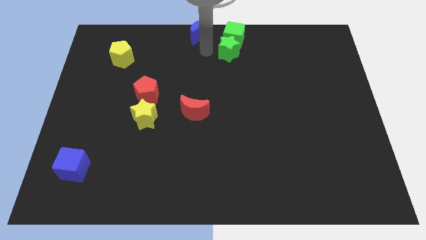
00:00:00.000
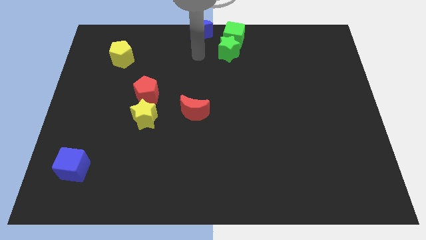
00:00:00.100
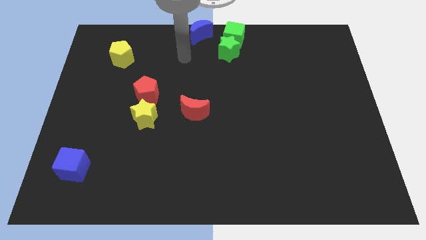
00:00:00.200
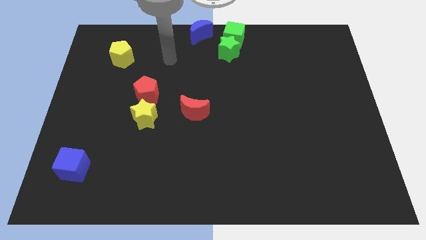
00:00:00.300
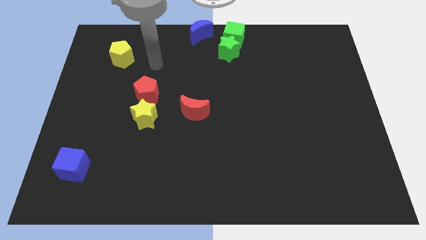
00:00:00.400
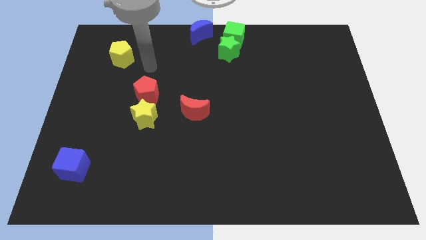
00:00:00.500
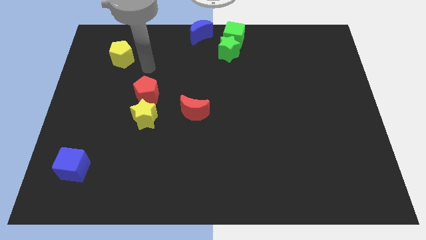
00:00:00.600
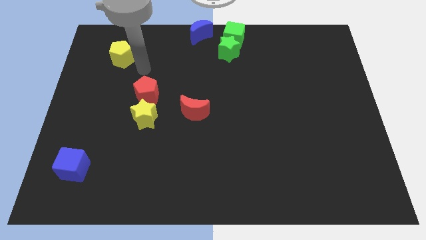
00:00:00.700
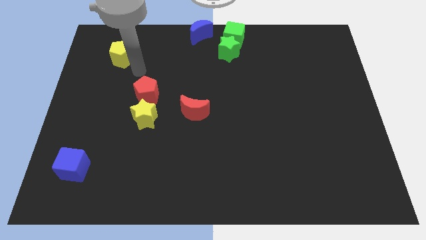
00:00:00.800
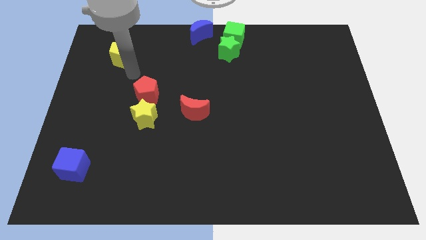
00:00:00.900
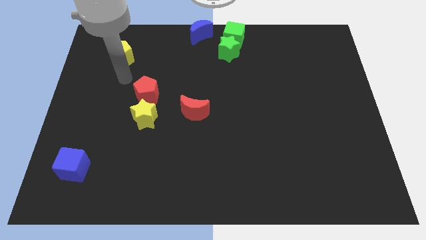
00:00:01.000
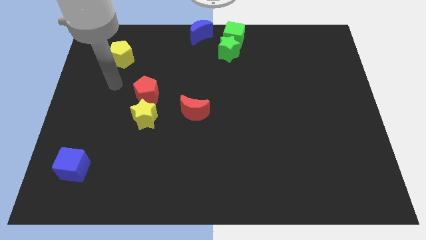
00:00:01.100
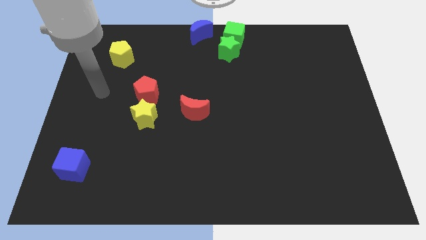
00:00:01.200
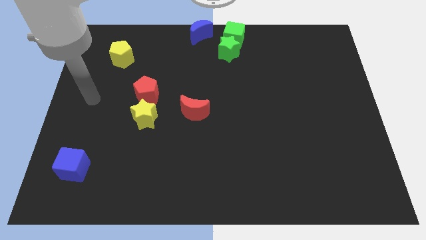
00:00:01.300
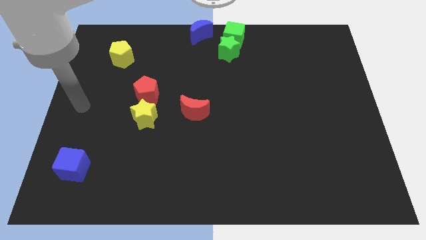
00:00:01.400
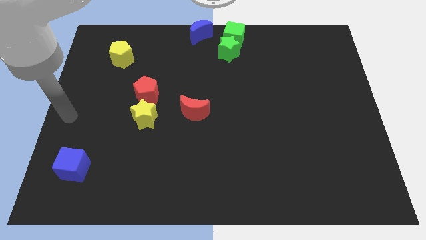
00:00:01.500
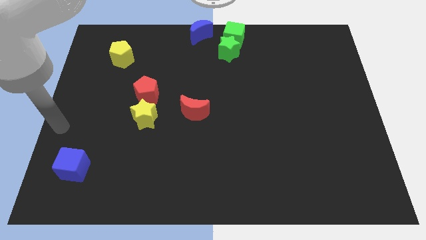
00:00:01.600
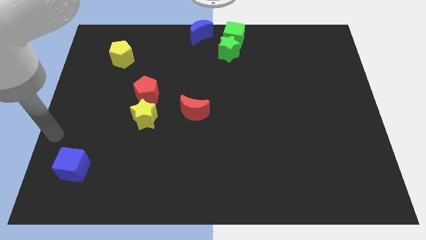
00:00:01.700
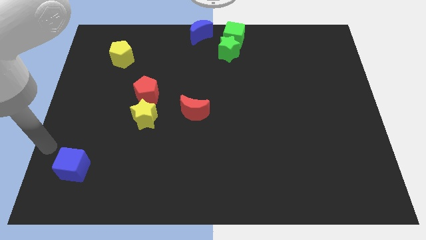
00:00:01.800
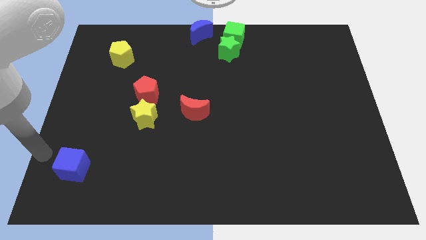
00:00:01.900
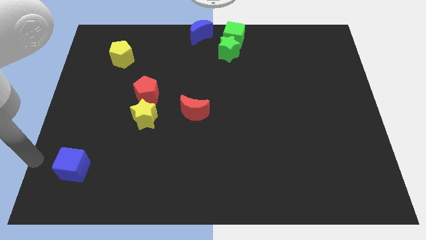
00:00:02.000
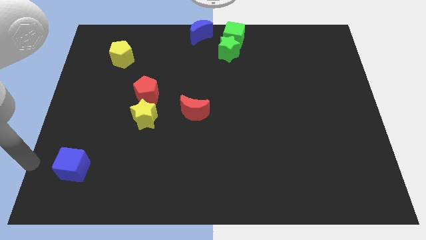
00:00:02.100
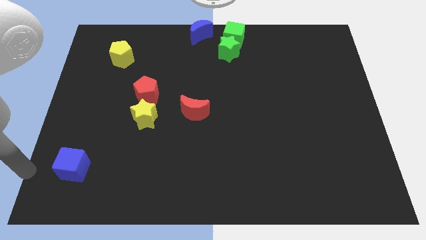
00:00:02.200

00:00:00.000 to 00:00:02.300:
point your hand at the left side of the blue cube

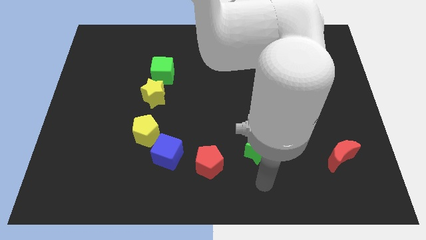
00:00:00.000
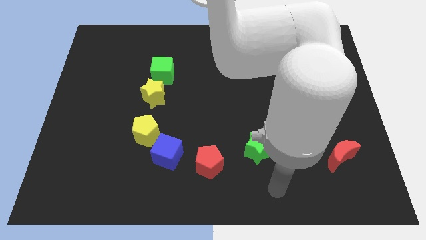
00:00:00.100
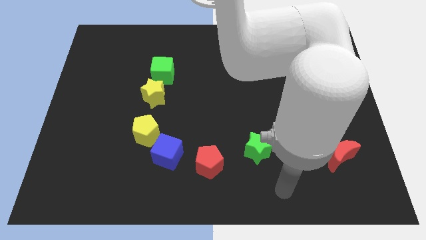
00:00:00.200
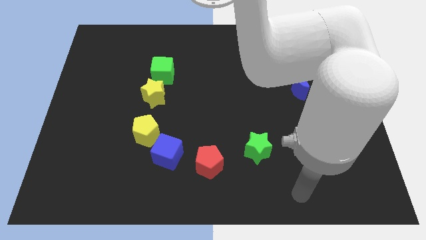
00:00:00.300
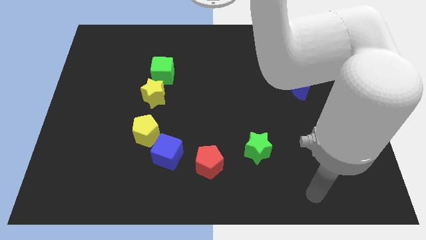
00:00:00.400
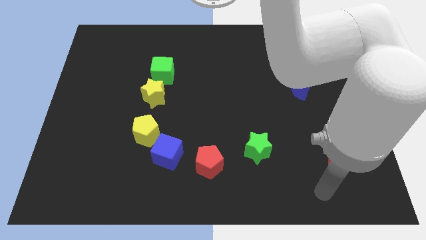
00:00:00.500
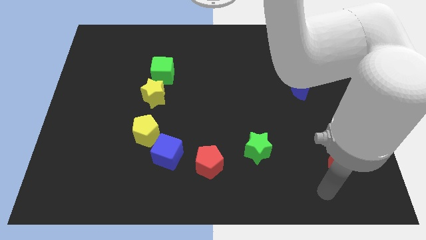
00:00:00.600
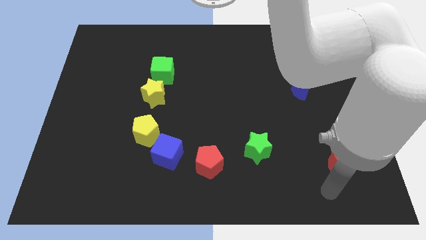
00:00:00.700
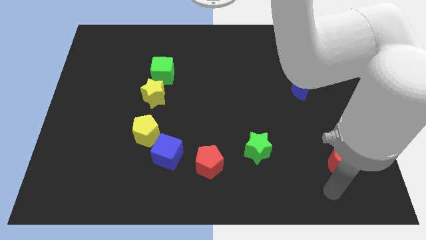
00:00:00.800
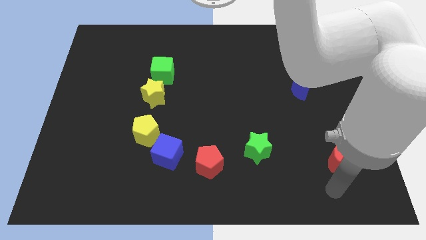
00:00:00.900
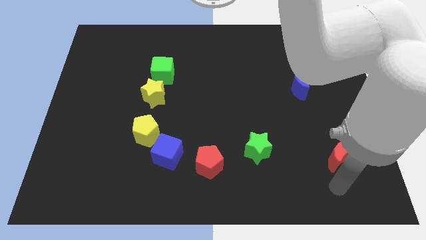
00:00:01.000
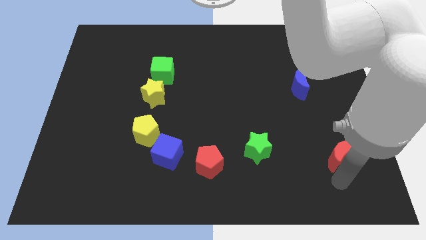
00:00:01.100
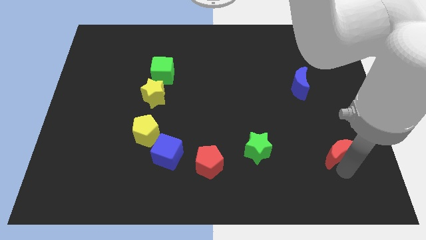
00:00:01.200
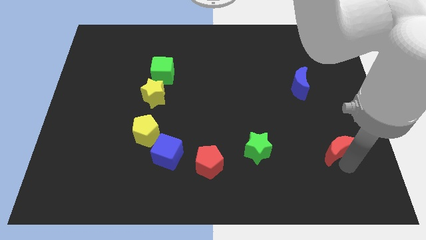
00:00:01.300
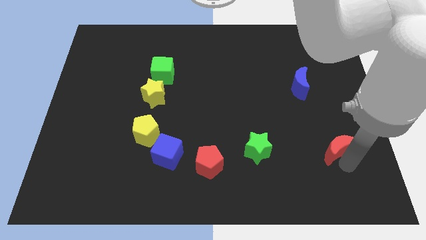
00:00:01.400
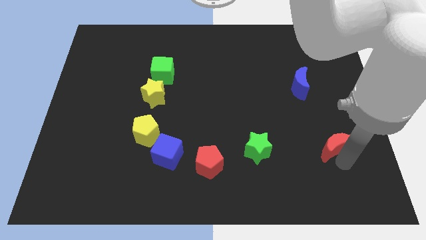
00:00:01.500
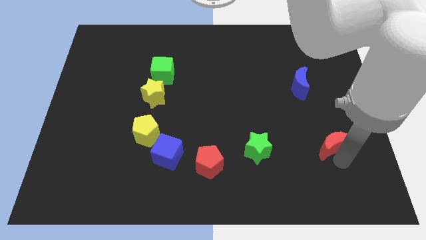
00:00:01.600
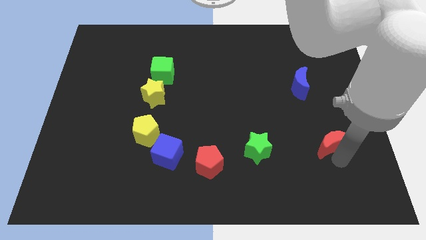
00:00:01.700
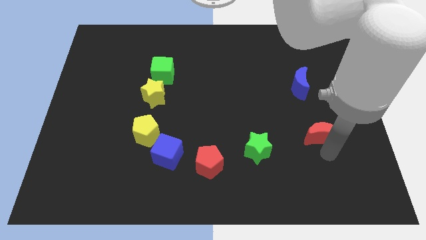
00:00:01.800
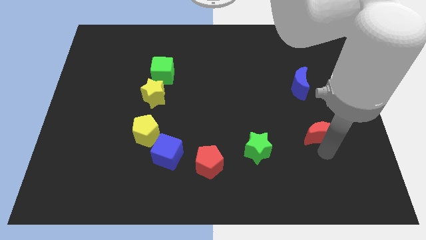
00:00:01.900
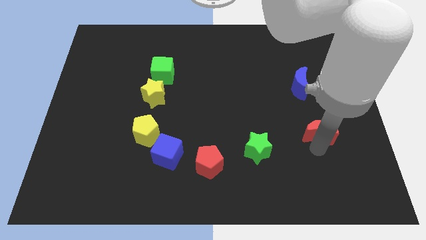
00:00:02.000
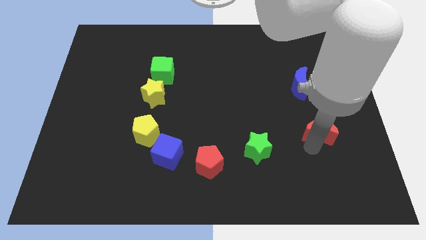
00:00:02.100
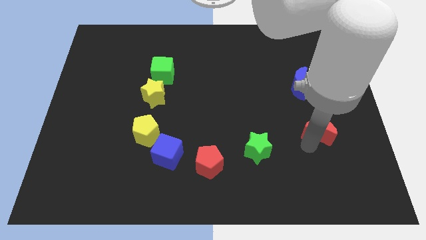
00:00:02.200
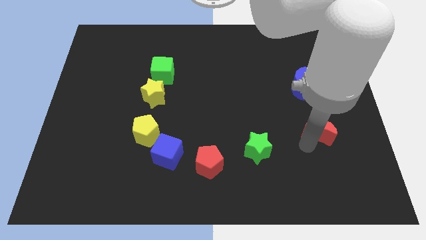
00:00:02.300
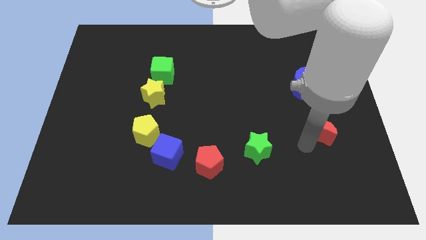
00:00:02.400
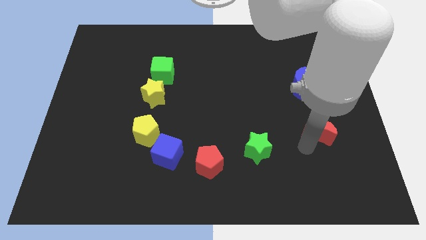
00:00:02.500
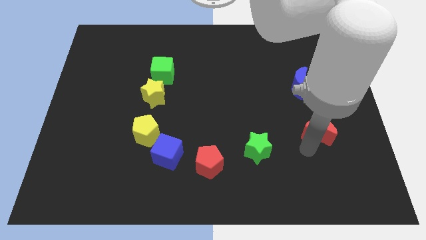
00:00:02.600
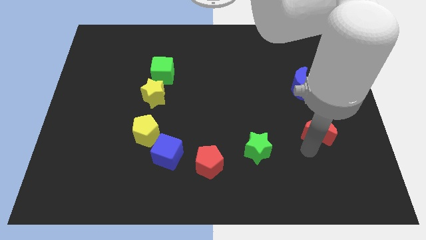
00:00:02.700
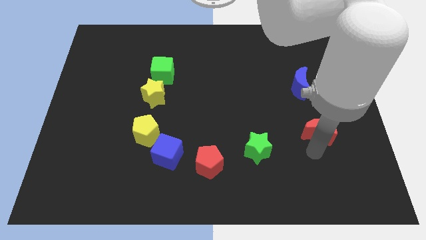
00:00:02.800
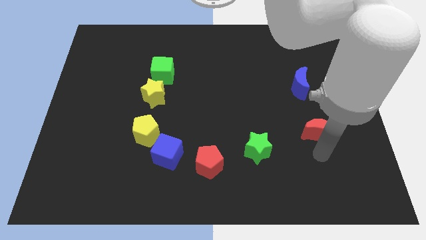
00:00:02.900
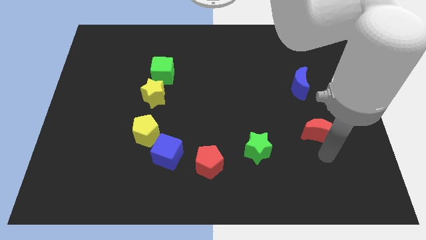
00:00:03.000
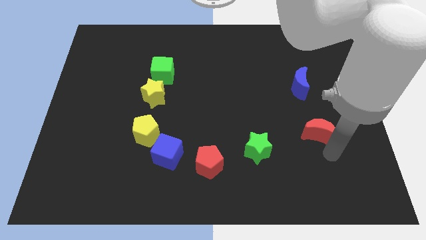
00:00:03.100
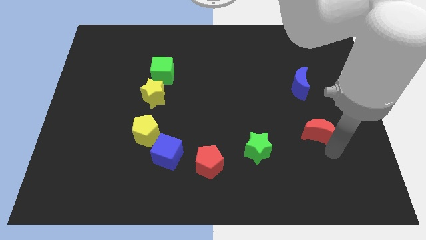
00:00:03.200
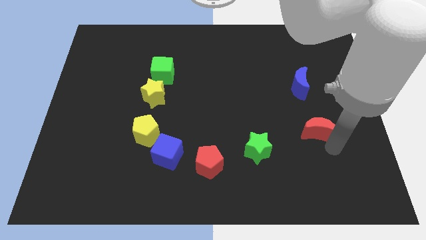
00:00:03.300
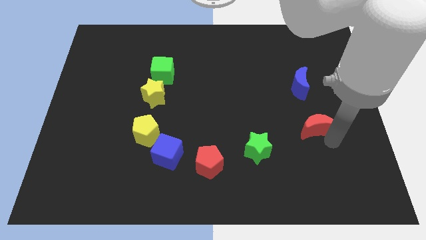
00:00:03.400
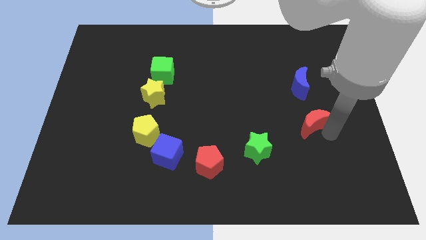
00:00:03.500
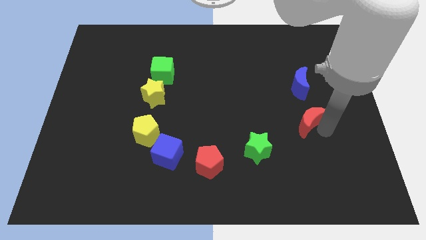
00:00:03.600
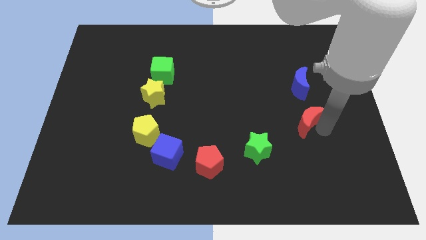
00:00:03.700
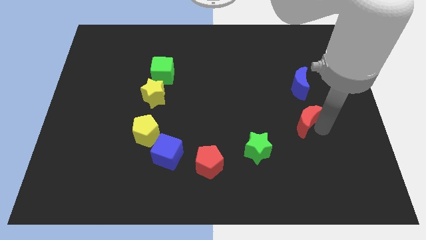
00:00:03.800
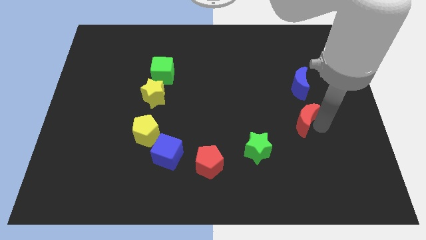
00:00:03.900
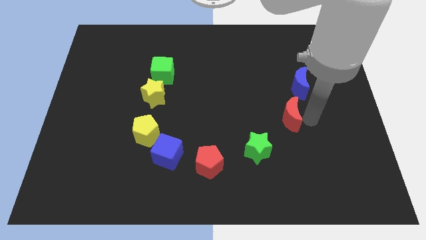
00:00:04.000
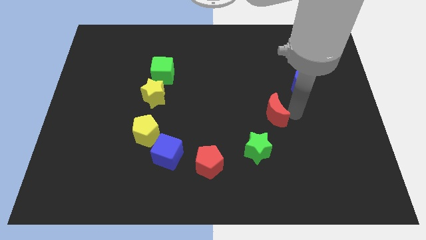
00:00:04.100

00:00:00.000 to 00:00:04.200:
place the red crescent diagonally in between the blue moon and green star

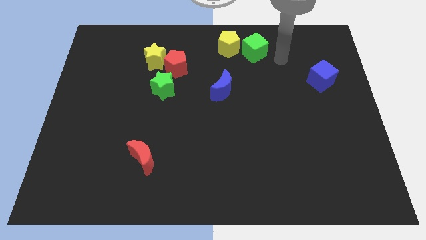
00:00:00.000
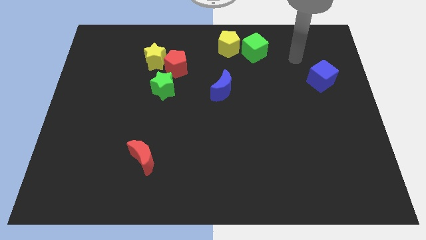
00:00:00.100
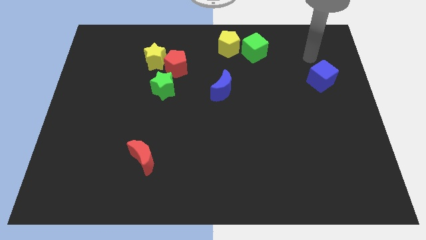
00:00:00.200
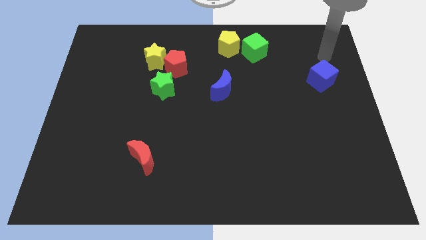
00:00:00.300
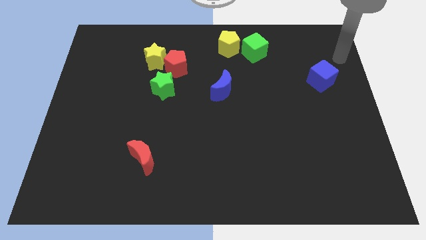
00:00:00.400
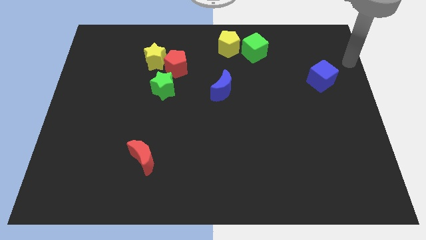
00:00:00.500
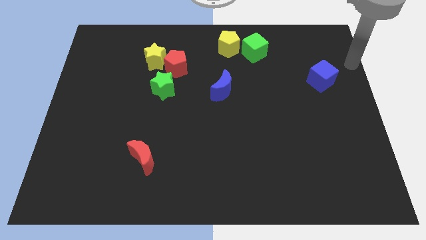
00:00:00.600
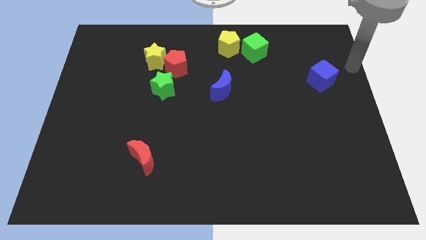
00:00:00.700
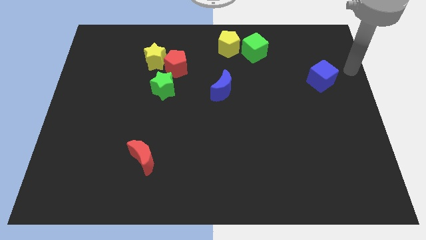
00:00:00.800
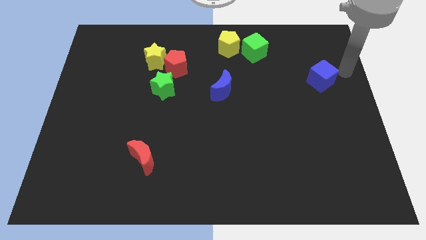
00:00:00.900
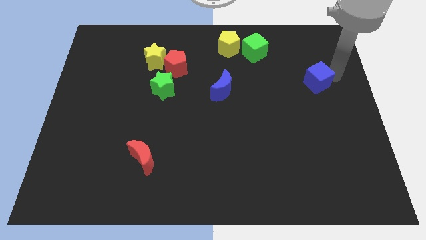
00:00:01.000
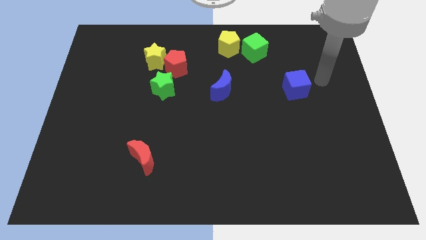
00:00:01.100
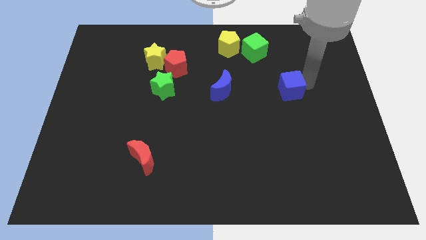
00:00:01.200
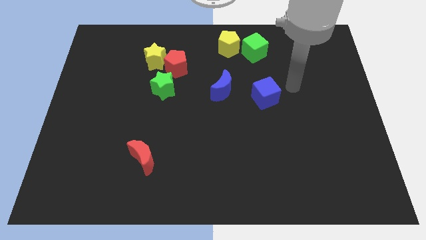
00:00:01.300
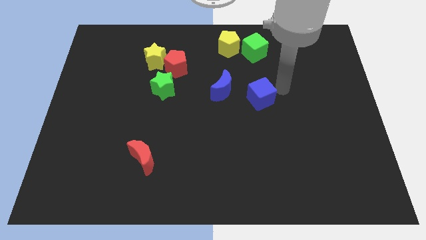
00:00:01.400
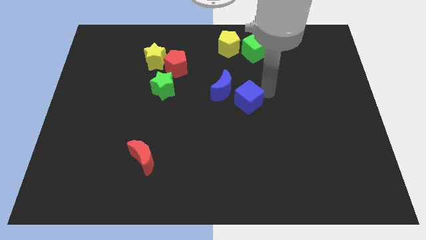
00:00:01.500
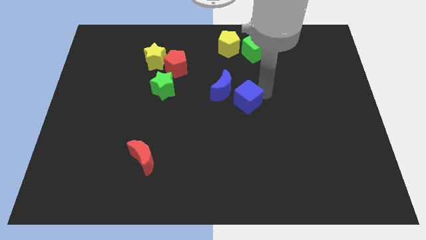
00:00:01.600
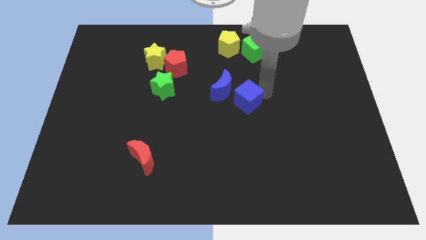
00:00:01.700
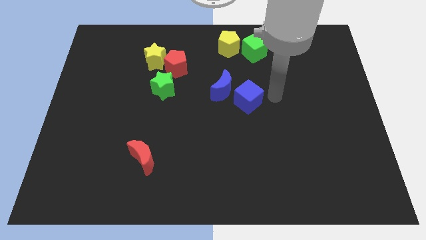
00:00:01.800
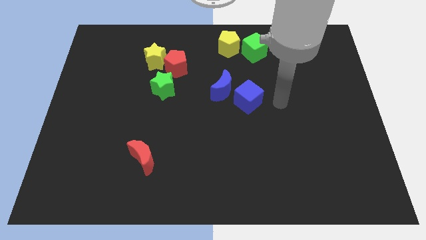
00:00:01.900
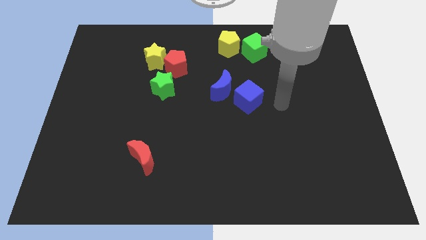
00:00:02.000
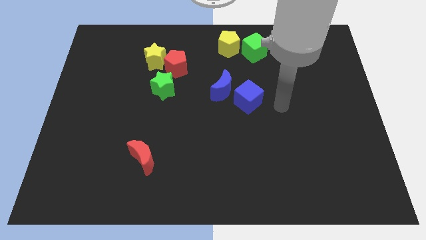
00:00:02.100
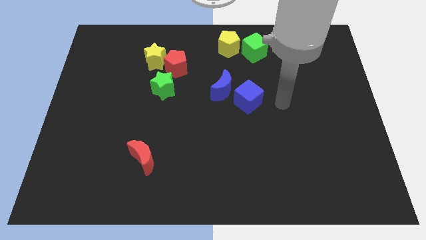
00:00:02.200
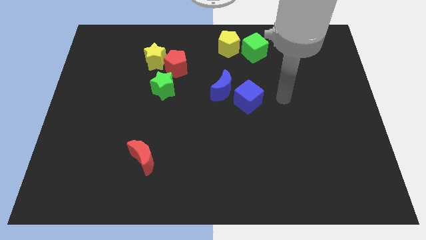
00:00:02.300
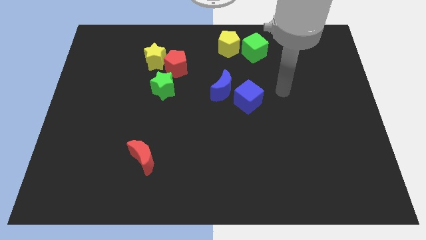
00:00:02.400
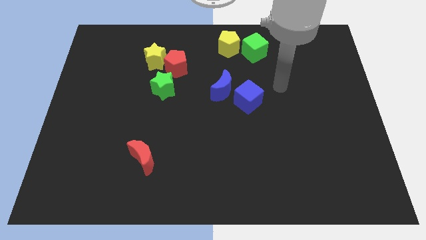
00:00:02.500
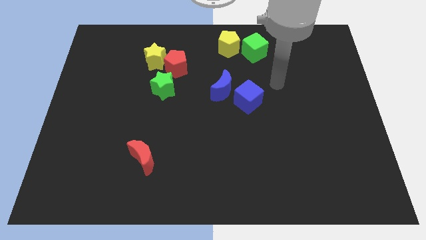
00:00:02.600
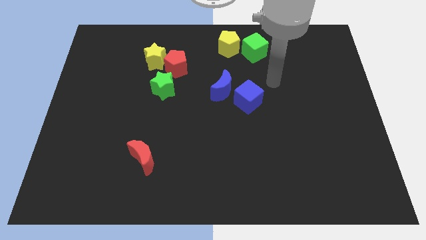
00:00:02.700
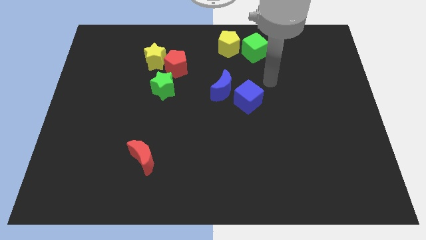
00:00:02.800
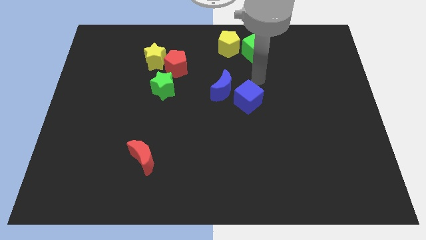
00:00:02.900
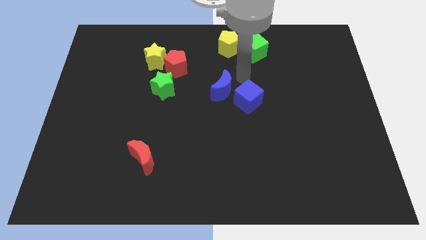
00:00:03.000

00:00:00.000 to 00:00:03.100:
push the blue cube to the bottom of the green cube
